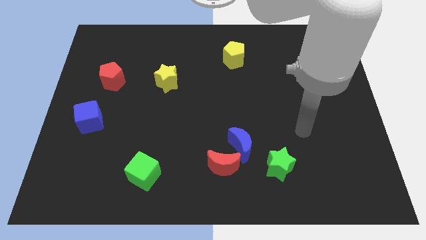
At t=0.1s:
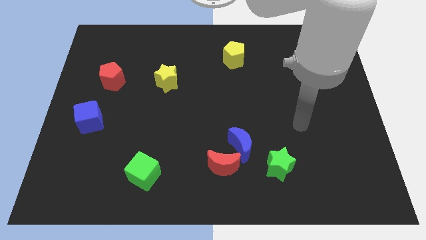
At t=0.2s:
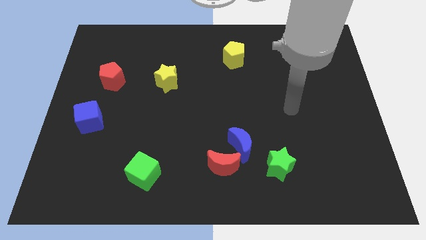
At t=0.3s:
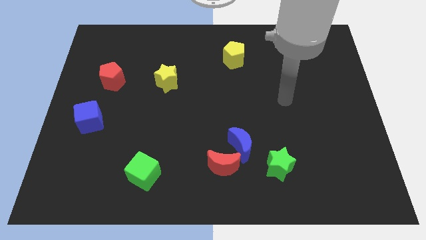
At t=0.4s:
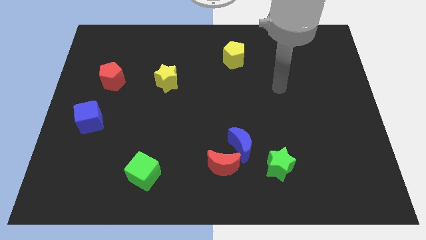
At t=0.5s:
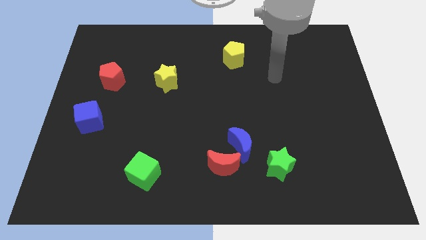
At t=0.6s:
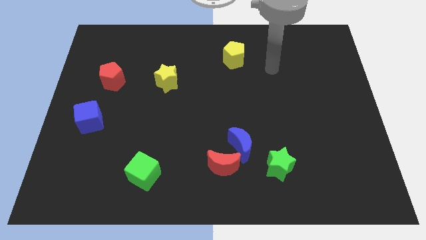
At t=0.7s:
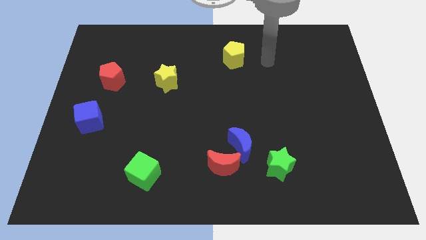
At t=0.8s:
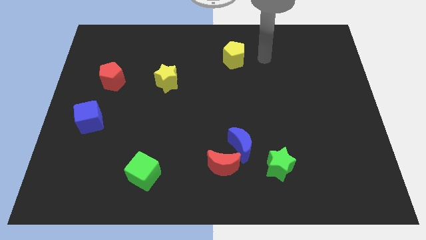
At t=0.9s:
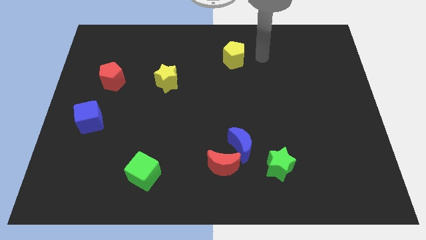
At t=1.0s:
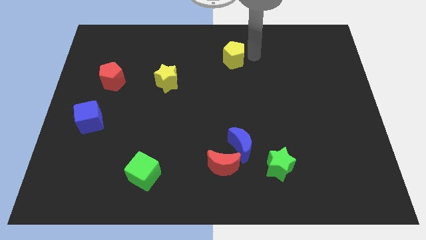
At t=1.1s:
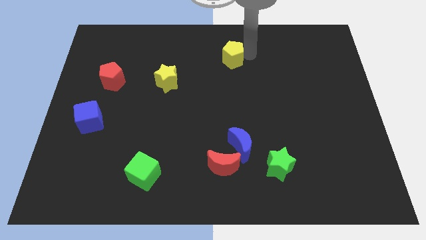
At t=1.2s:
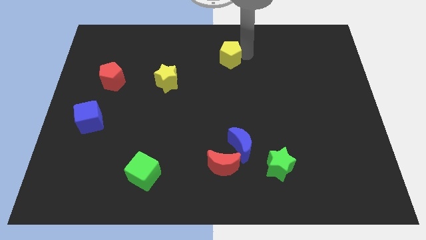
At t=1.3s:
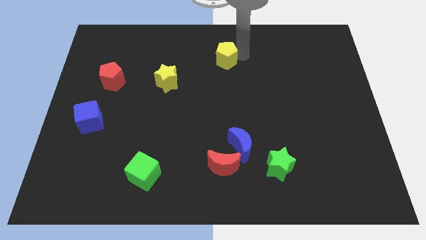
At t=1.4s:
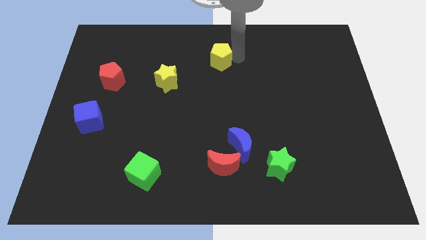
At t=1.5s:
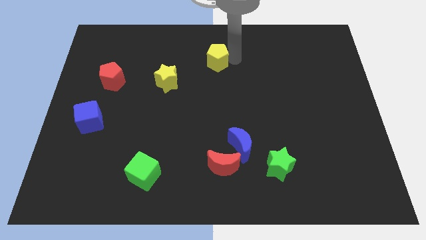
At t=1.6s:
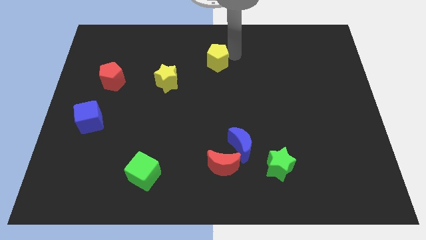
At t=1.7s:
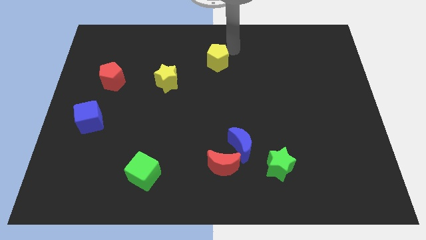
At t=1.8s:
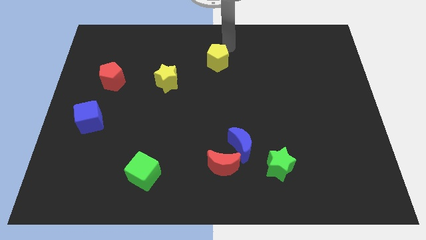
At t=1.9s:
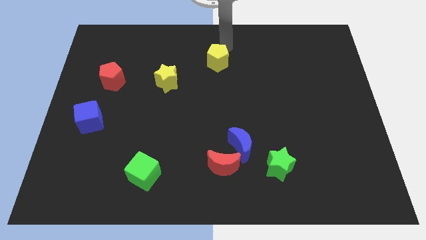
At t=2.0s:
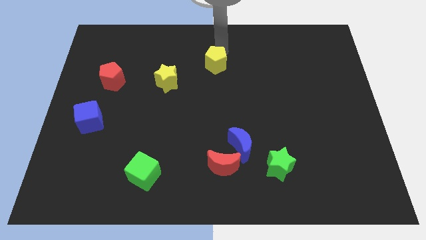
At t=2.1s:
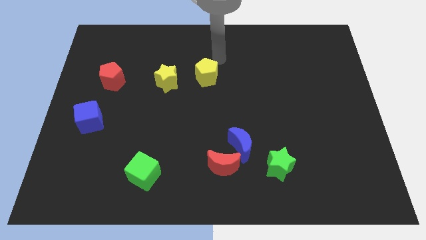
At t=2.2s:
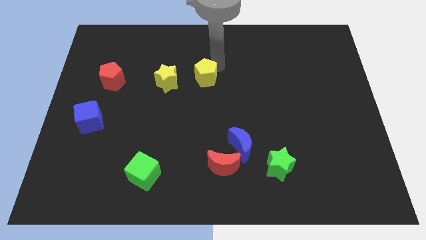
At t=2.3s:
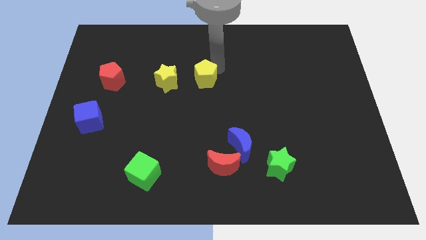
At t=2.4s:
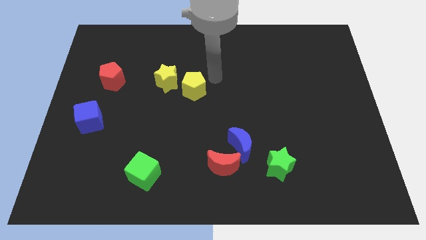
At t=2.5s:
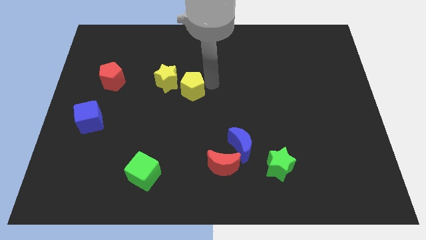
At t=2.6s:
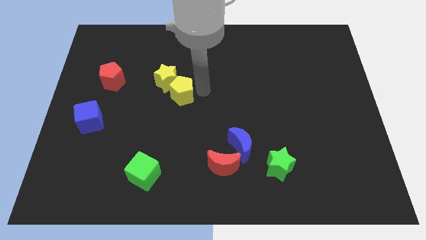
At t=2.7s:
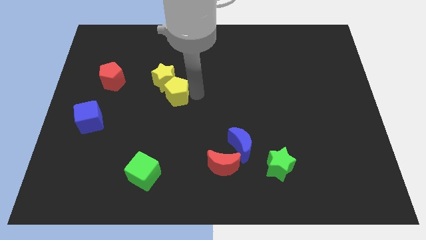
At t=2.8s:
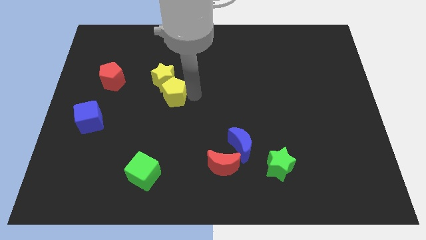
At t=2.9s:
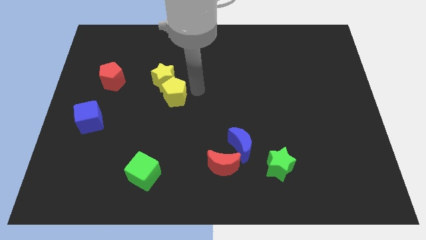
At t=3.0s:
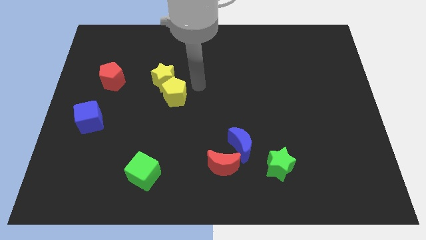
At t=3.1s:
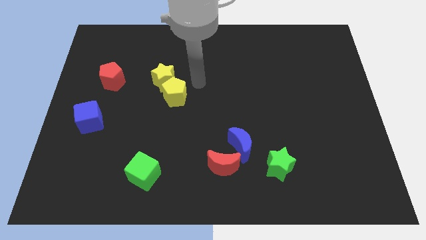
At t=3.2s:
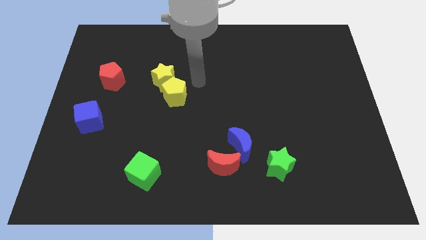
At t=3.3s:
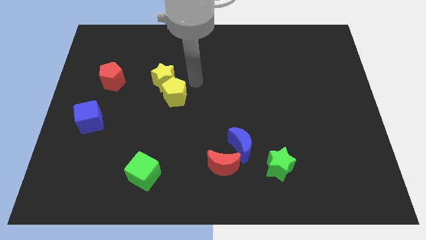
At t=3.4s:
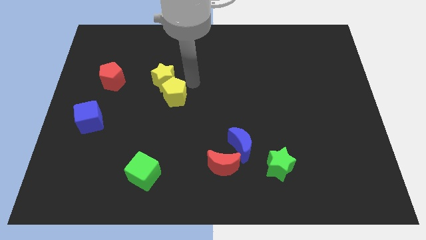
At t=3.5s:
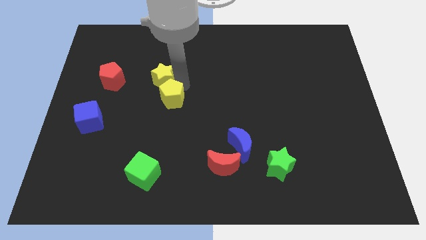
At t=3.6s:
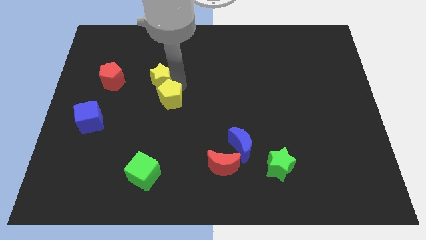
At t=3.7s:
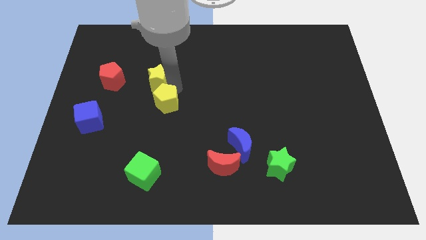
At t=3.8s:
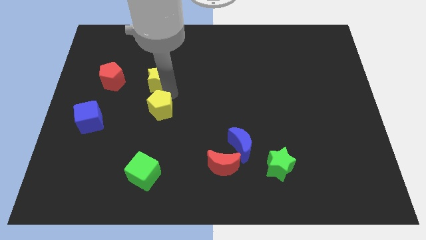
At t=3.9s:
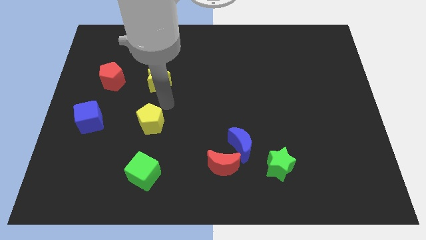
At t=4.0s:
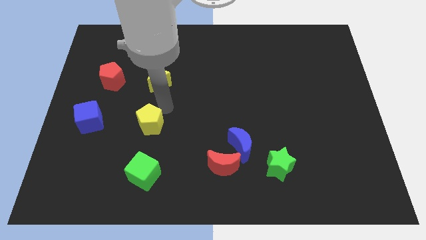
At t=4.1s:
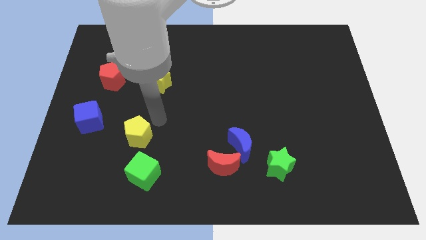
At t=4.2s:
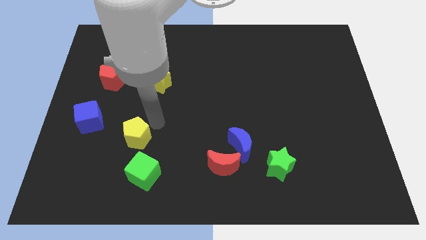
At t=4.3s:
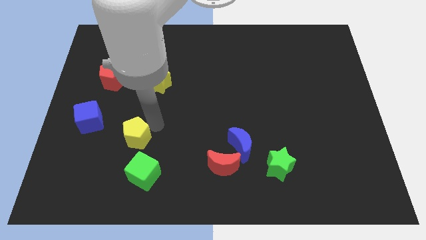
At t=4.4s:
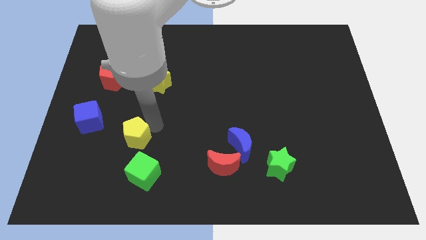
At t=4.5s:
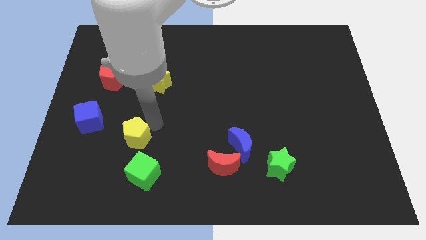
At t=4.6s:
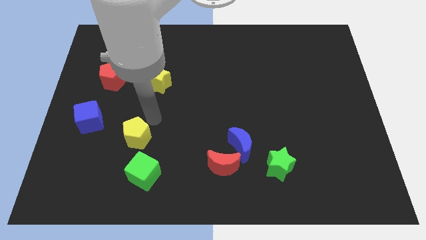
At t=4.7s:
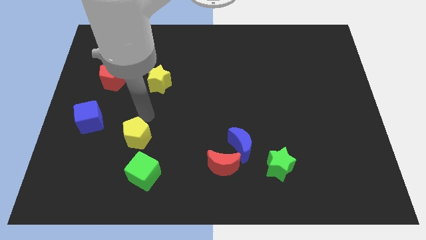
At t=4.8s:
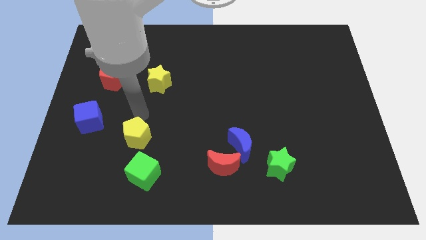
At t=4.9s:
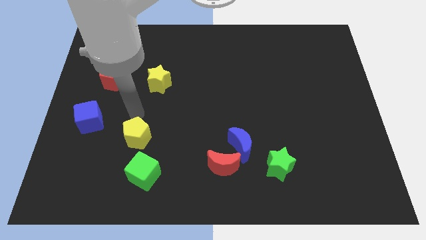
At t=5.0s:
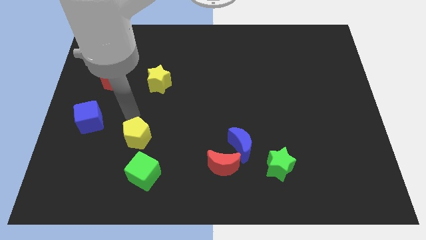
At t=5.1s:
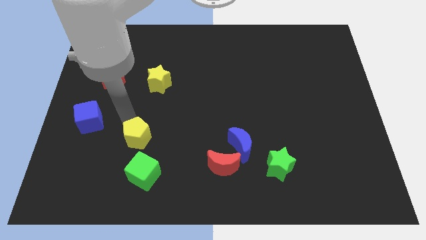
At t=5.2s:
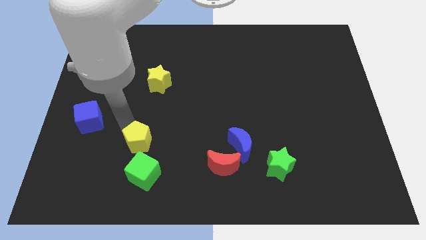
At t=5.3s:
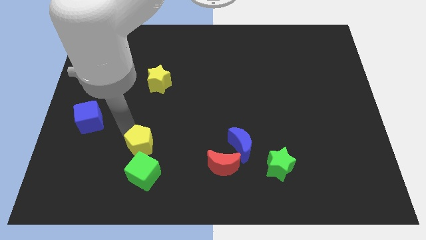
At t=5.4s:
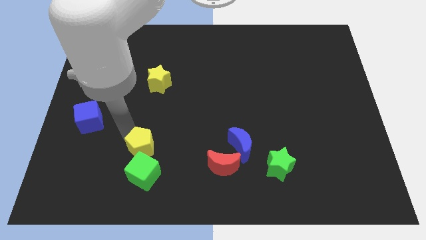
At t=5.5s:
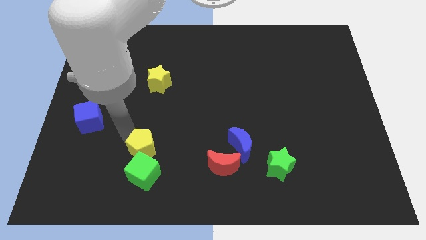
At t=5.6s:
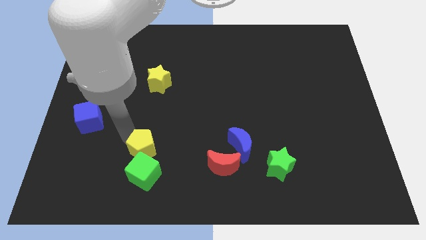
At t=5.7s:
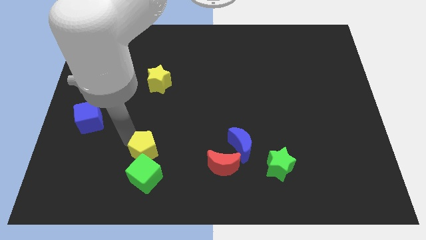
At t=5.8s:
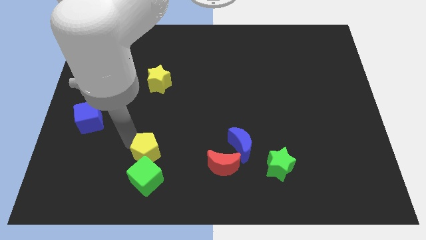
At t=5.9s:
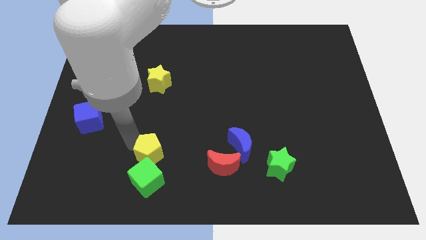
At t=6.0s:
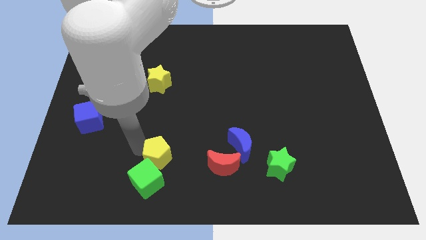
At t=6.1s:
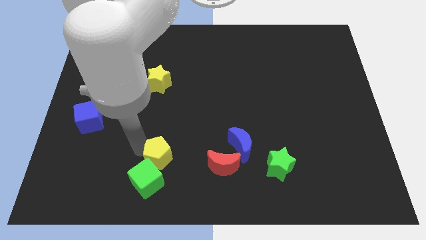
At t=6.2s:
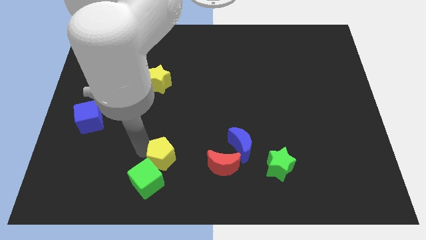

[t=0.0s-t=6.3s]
push the yellow pentagon to the green cube

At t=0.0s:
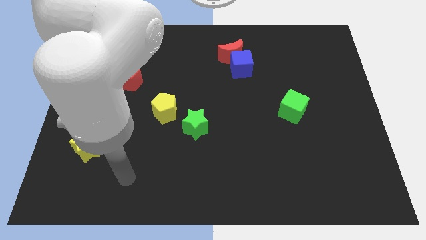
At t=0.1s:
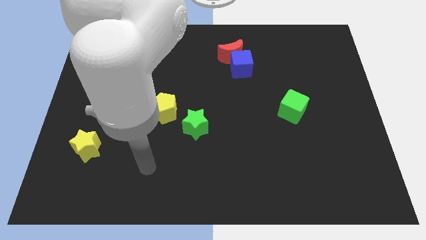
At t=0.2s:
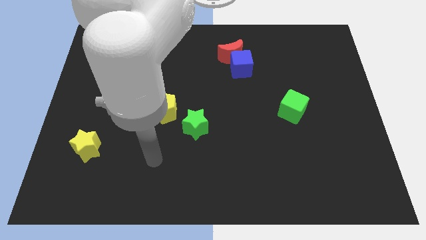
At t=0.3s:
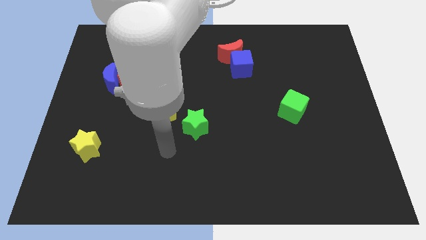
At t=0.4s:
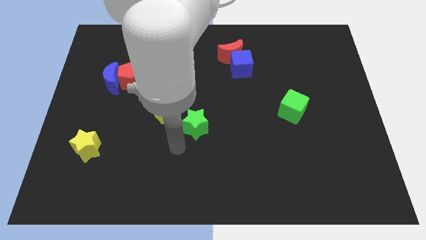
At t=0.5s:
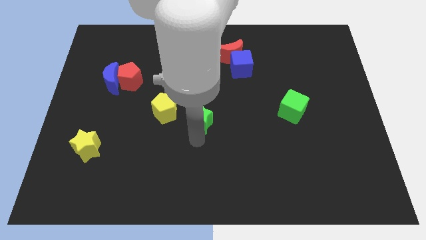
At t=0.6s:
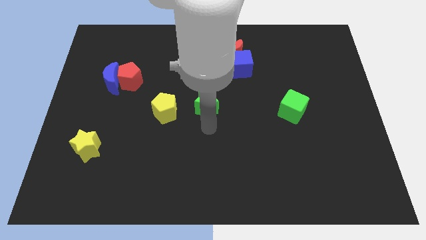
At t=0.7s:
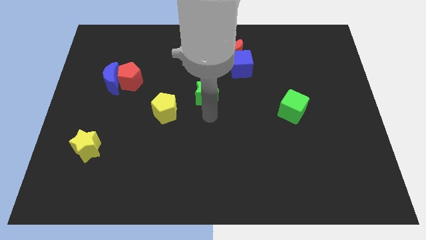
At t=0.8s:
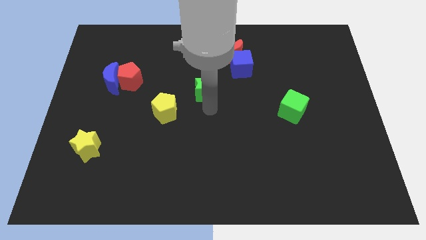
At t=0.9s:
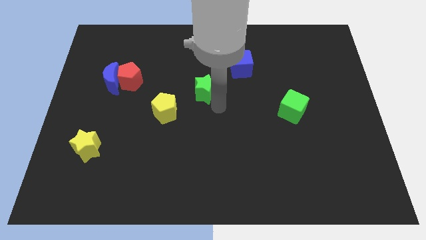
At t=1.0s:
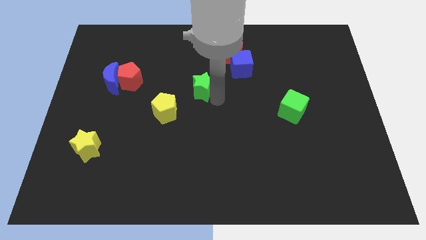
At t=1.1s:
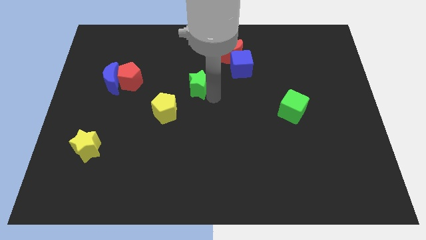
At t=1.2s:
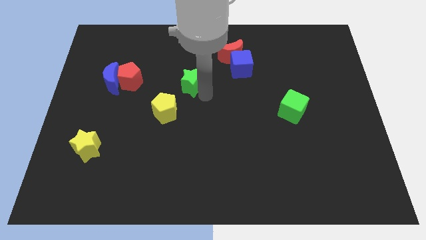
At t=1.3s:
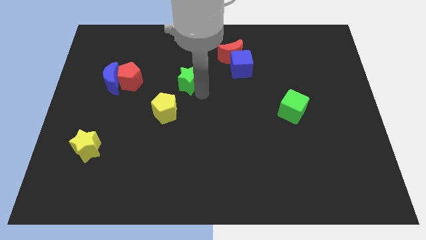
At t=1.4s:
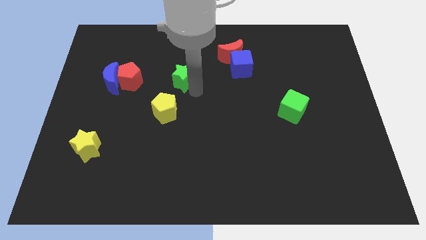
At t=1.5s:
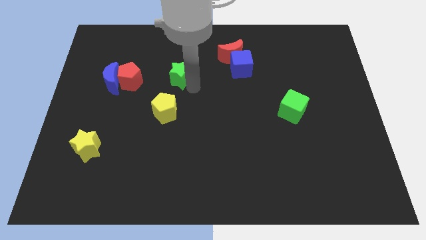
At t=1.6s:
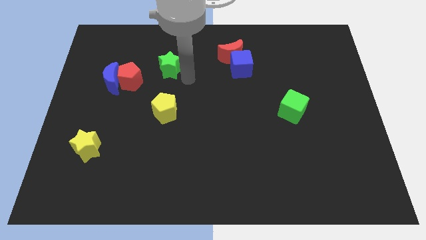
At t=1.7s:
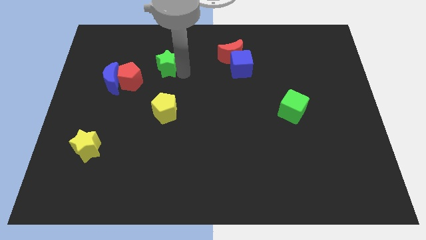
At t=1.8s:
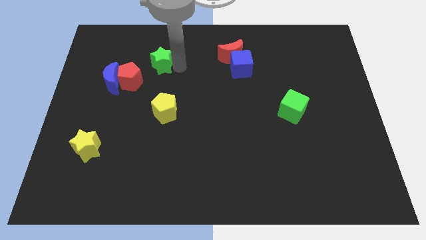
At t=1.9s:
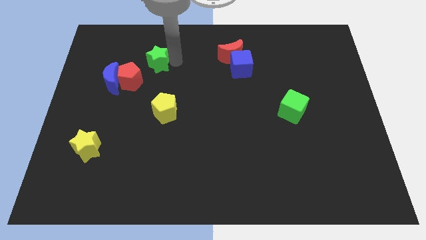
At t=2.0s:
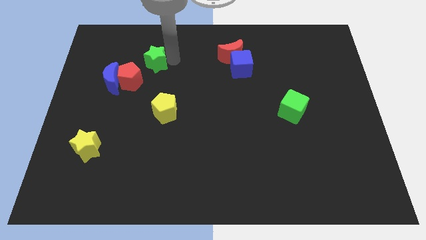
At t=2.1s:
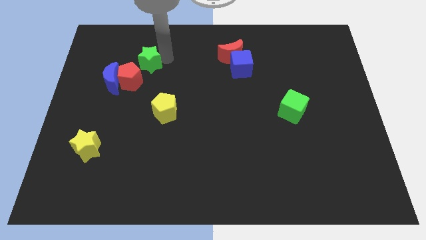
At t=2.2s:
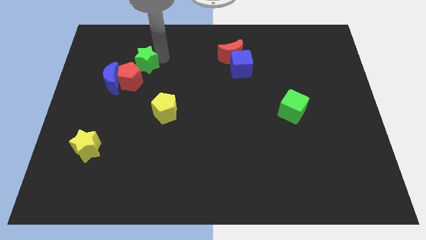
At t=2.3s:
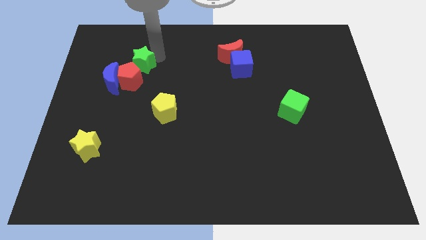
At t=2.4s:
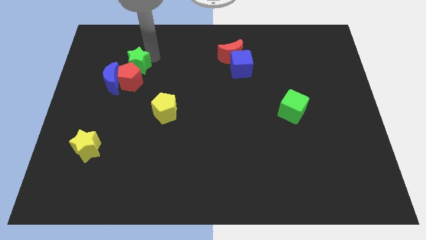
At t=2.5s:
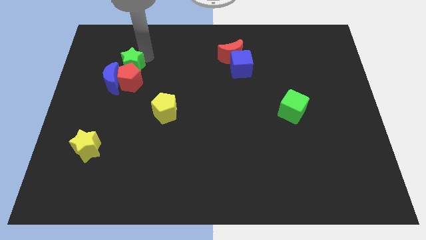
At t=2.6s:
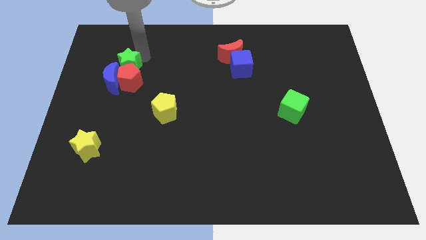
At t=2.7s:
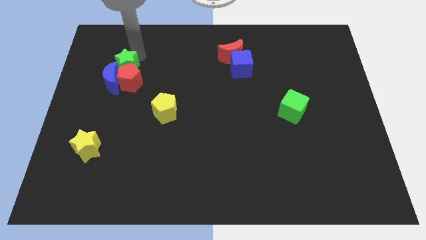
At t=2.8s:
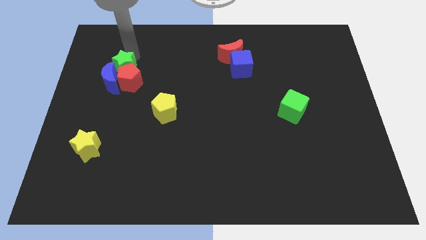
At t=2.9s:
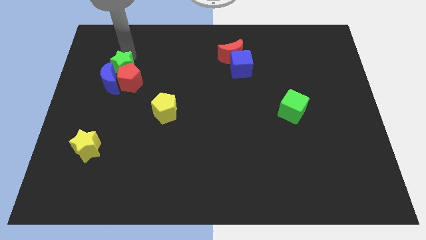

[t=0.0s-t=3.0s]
move the green star close to the blue moon
